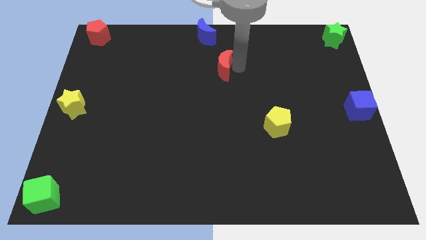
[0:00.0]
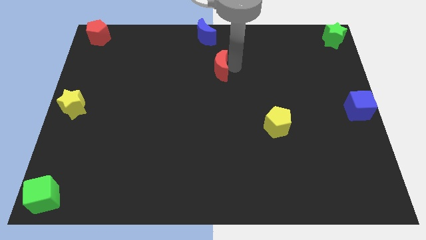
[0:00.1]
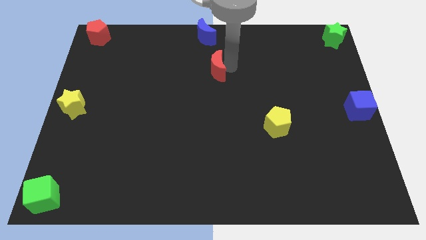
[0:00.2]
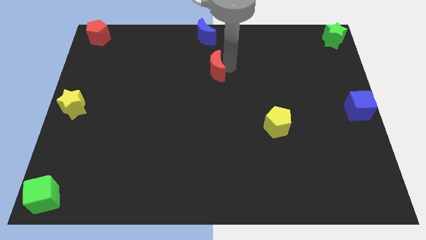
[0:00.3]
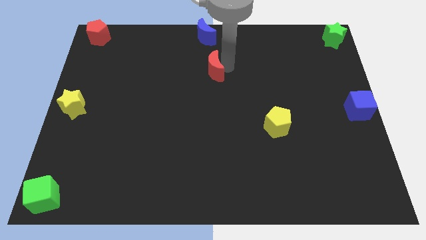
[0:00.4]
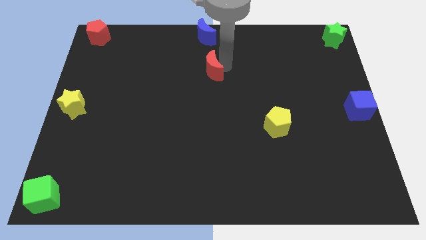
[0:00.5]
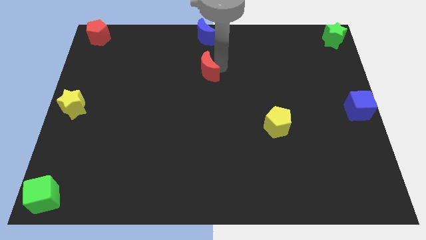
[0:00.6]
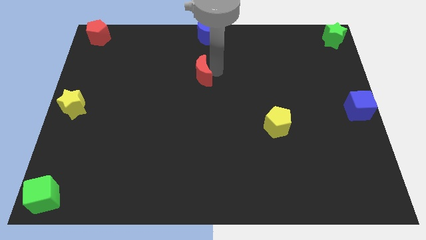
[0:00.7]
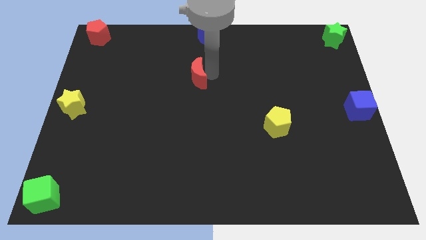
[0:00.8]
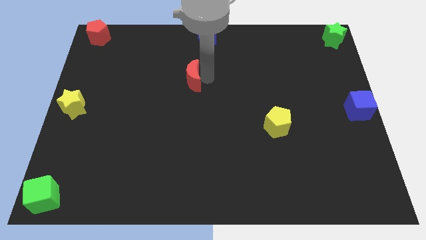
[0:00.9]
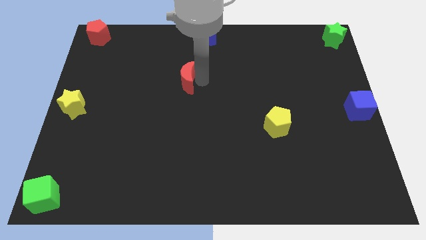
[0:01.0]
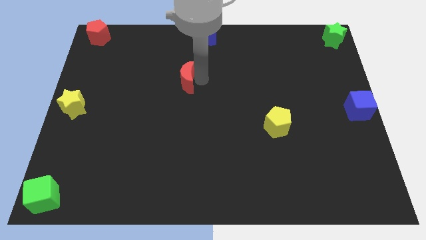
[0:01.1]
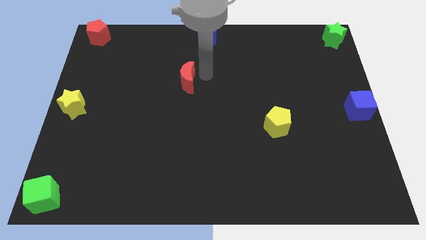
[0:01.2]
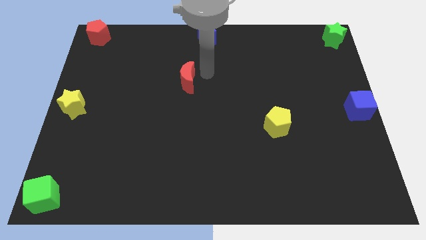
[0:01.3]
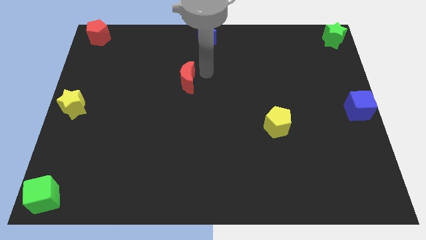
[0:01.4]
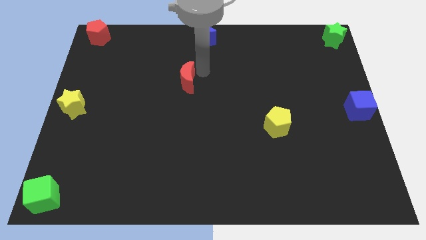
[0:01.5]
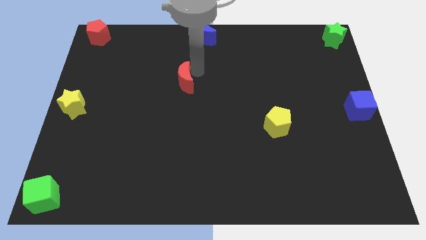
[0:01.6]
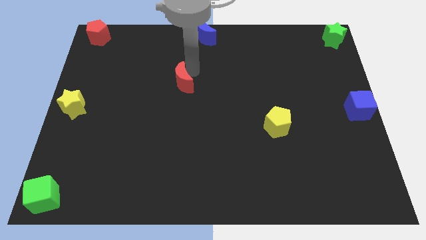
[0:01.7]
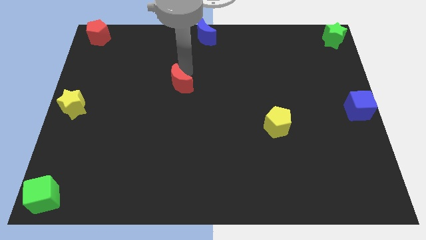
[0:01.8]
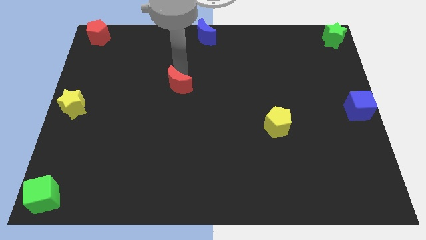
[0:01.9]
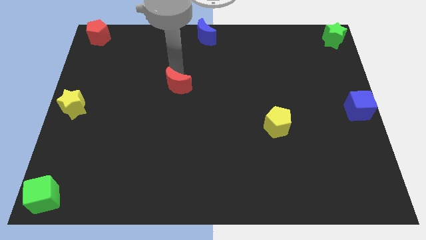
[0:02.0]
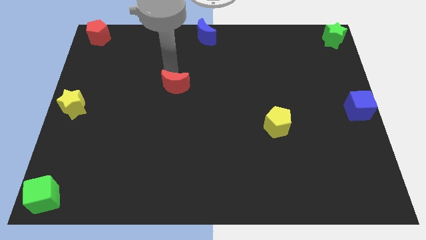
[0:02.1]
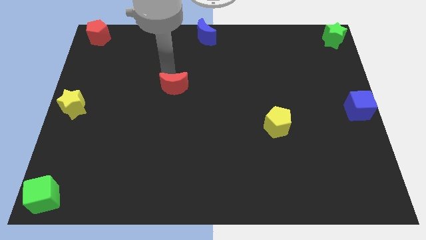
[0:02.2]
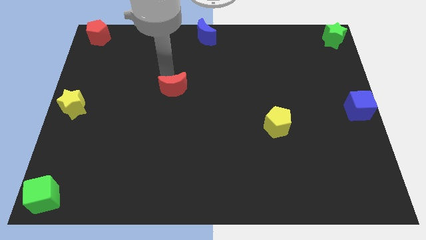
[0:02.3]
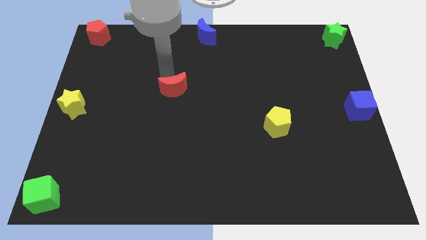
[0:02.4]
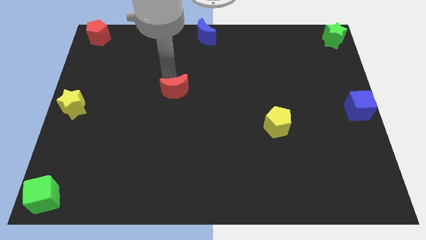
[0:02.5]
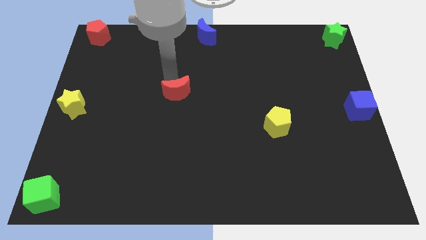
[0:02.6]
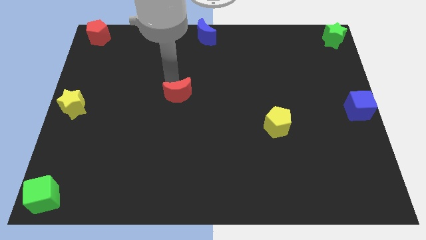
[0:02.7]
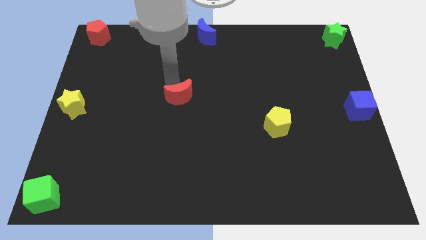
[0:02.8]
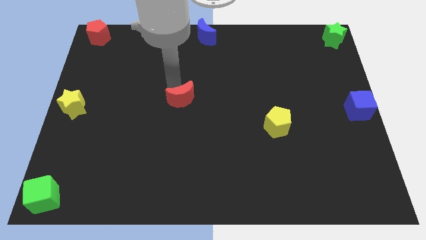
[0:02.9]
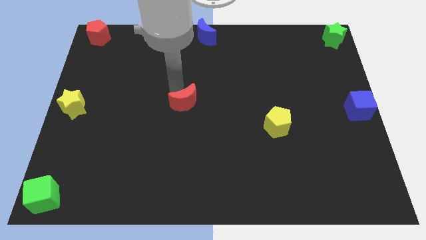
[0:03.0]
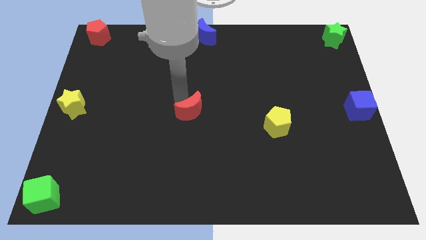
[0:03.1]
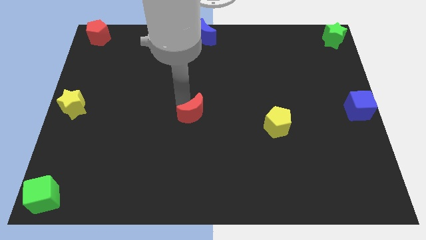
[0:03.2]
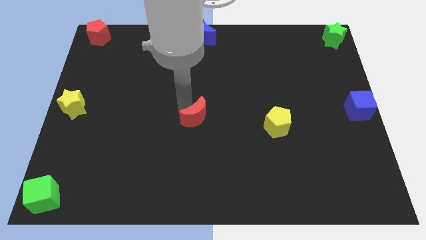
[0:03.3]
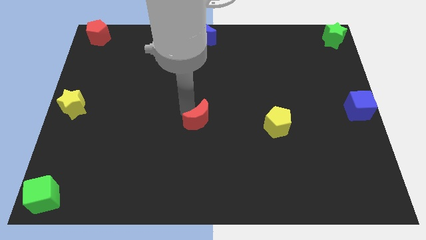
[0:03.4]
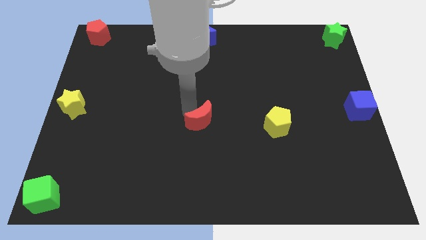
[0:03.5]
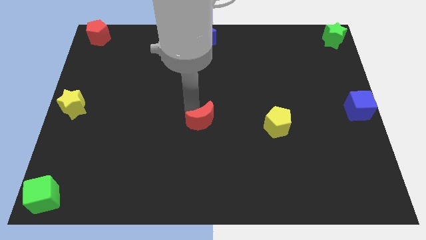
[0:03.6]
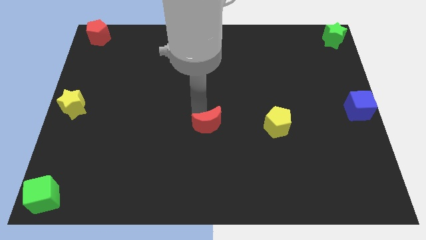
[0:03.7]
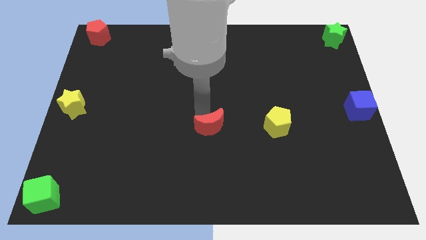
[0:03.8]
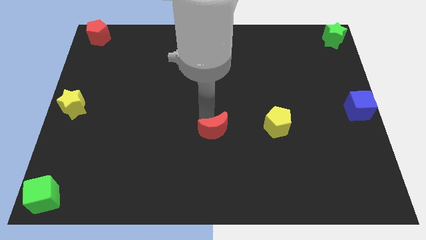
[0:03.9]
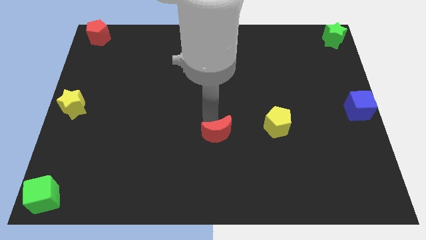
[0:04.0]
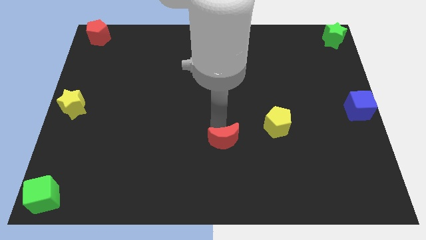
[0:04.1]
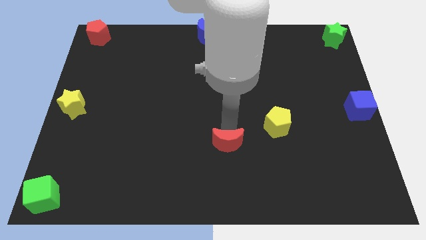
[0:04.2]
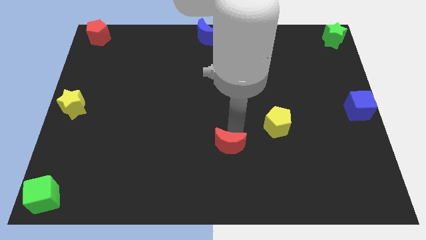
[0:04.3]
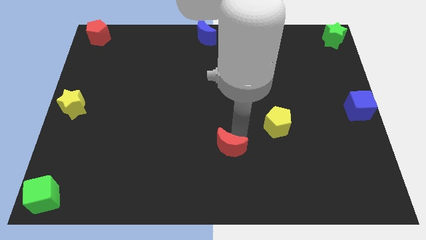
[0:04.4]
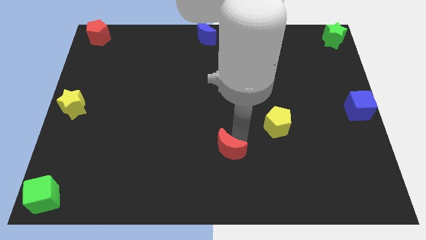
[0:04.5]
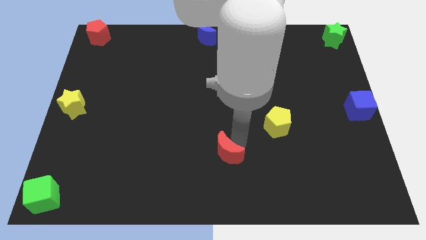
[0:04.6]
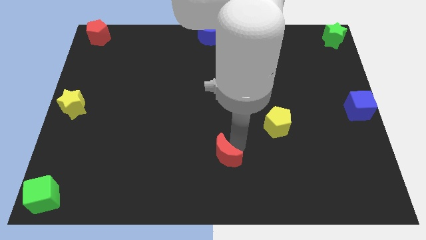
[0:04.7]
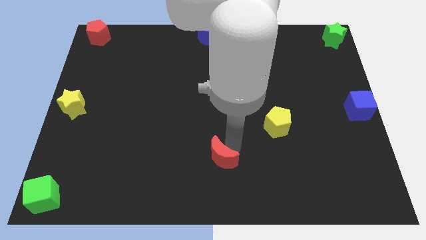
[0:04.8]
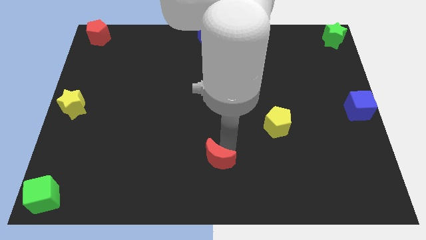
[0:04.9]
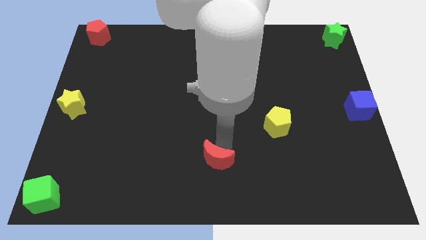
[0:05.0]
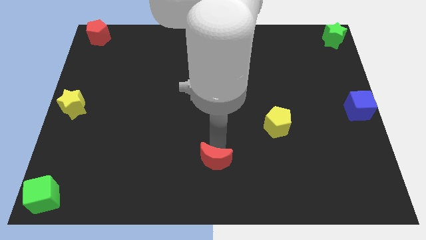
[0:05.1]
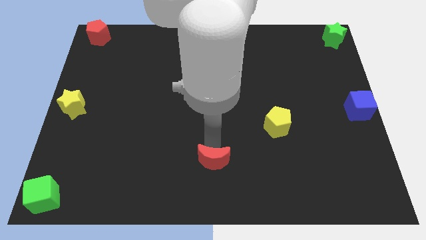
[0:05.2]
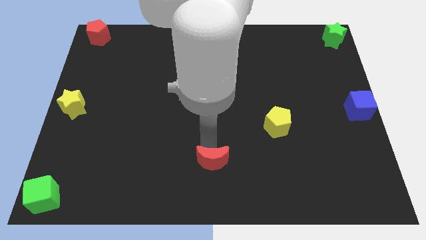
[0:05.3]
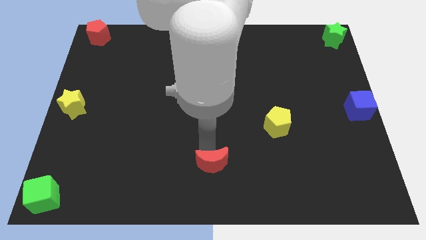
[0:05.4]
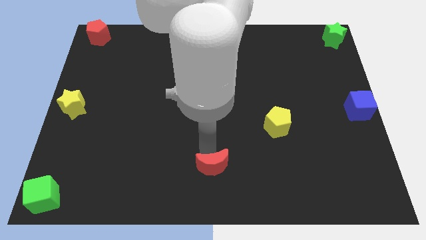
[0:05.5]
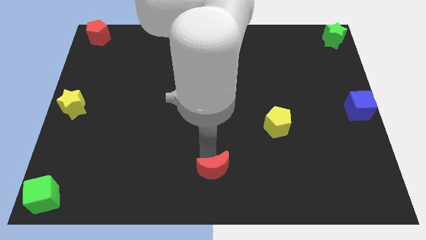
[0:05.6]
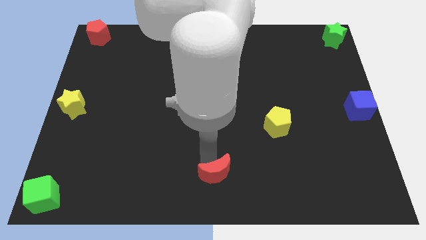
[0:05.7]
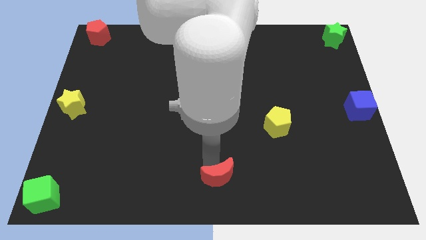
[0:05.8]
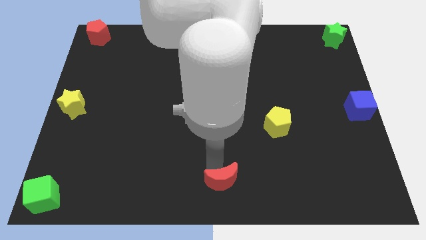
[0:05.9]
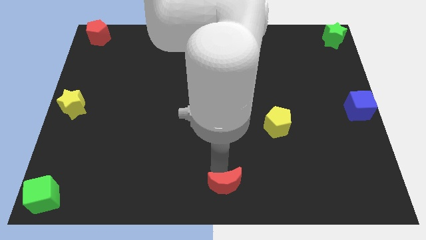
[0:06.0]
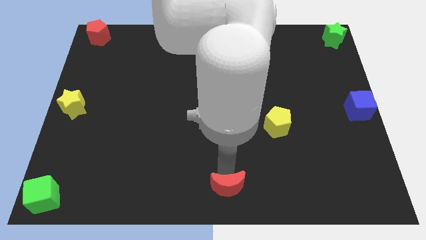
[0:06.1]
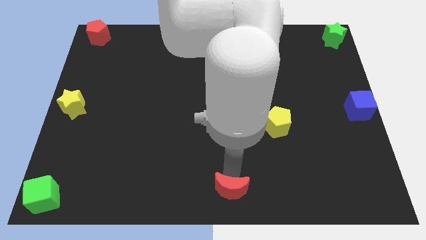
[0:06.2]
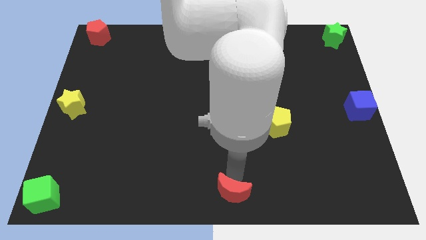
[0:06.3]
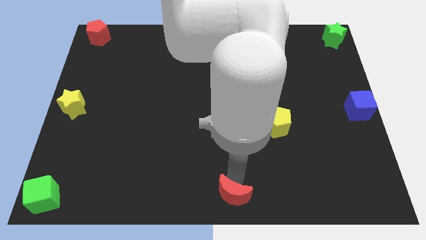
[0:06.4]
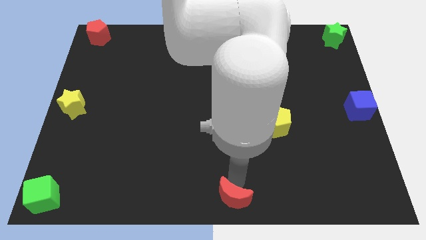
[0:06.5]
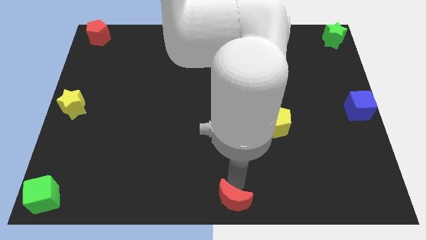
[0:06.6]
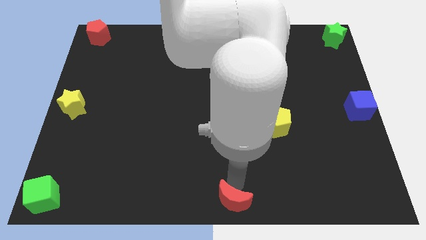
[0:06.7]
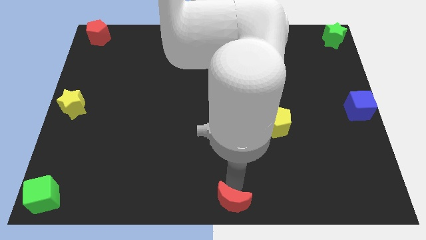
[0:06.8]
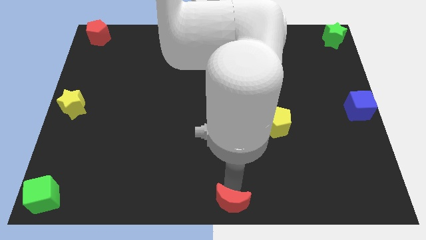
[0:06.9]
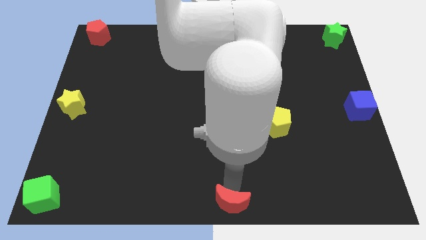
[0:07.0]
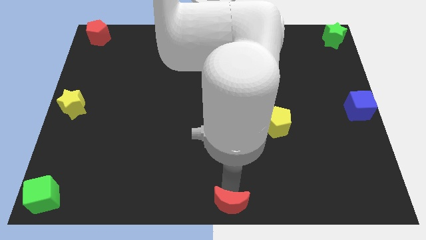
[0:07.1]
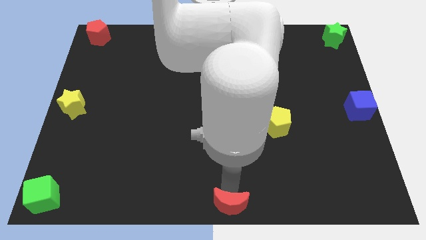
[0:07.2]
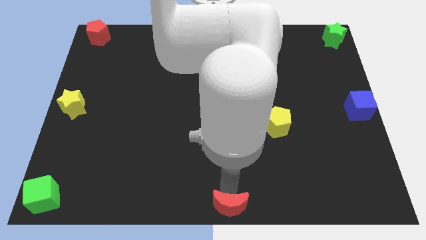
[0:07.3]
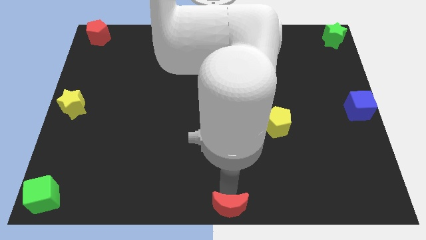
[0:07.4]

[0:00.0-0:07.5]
push the red crescent to the bottom center on the board

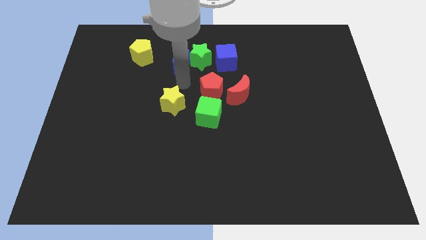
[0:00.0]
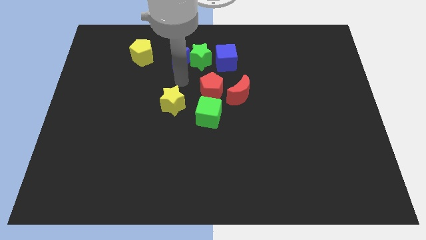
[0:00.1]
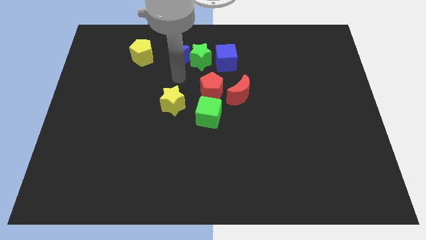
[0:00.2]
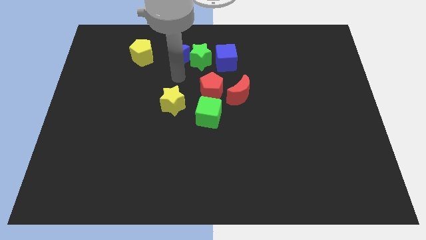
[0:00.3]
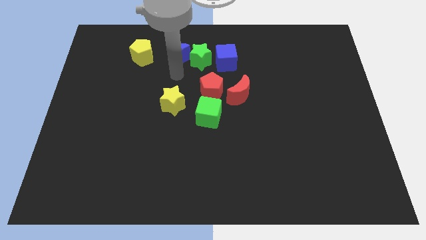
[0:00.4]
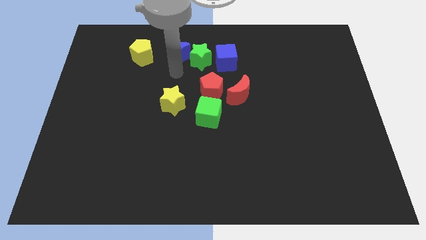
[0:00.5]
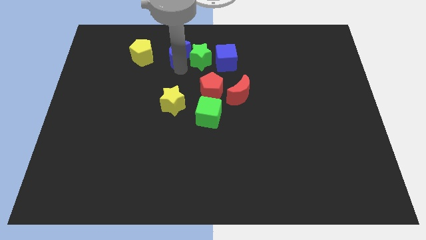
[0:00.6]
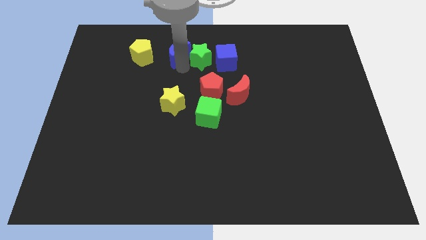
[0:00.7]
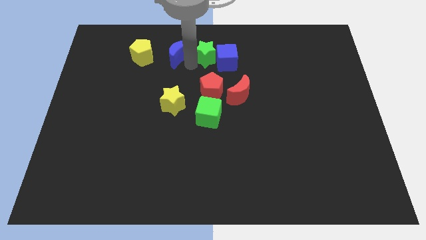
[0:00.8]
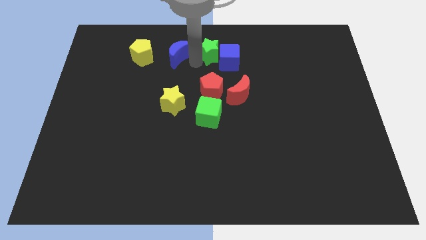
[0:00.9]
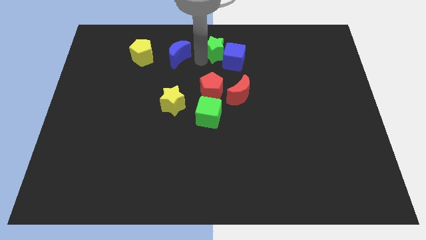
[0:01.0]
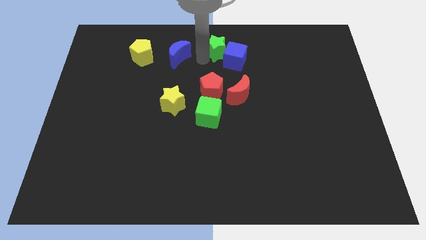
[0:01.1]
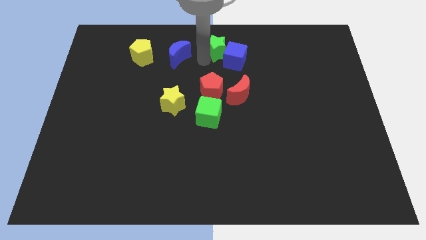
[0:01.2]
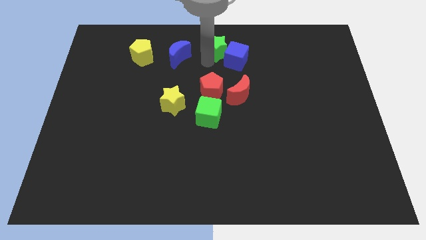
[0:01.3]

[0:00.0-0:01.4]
move the green star into the blue cube

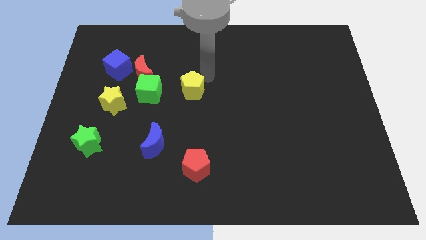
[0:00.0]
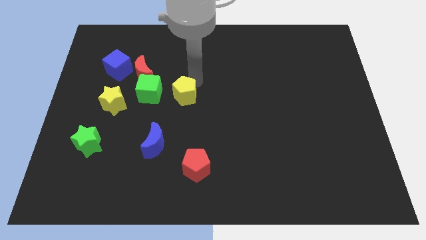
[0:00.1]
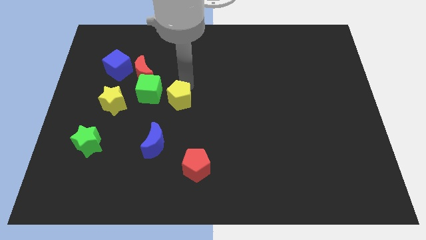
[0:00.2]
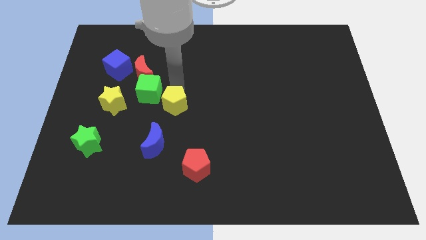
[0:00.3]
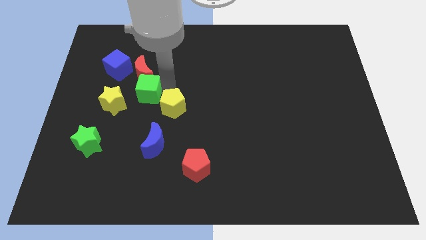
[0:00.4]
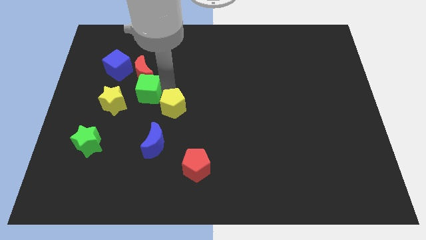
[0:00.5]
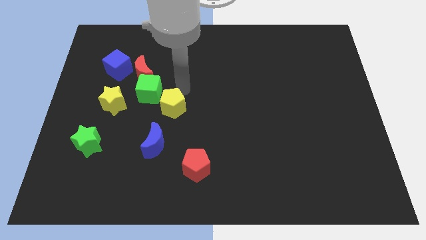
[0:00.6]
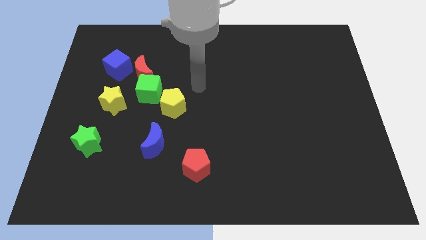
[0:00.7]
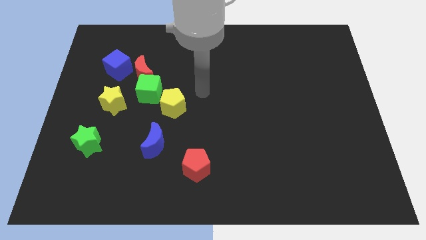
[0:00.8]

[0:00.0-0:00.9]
place the yellow pentagon towards the bottom right side of the green cube
